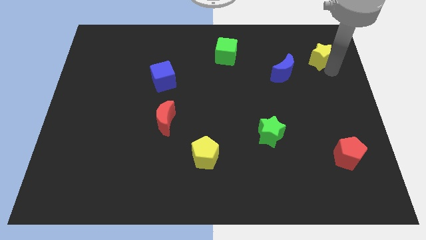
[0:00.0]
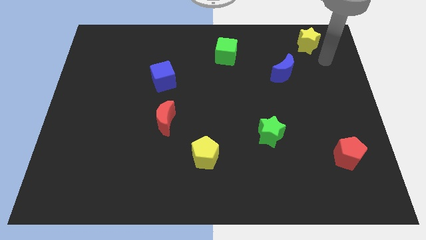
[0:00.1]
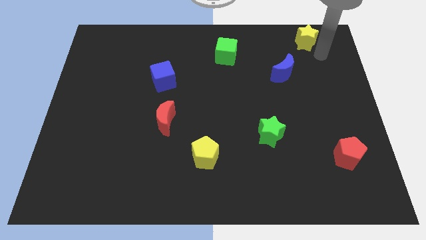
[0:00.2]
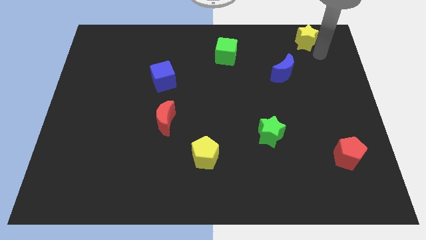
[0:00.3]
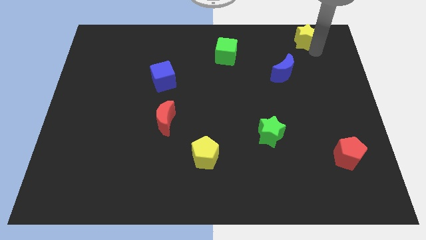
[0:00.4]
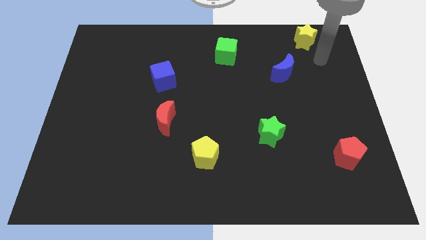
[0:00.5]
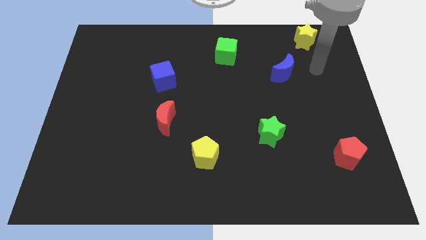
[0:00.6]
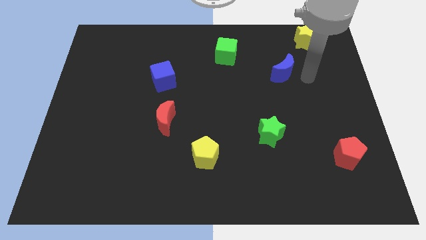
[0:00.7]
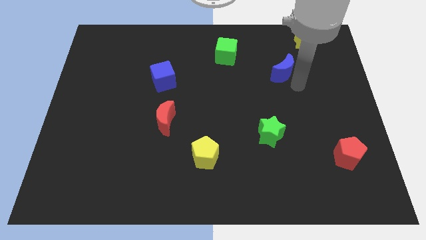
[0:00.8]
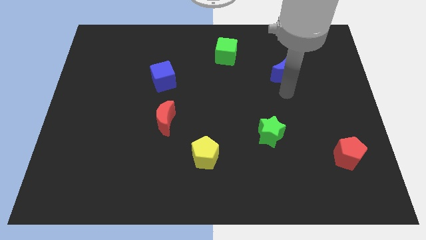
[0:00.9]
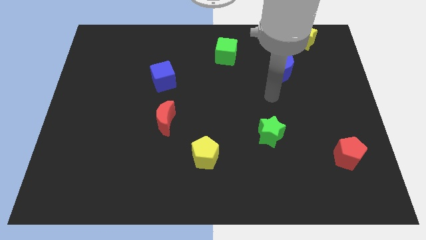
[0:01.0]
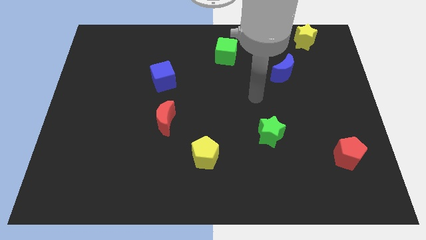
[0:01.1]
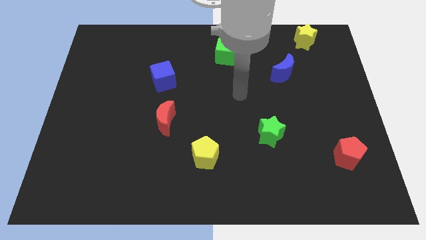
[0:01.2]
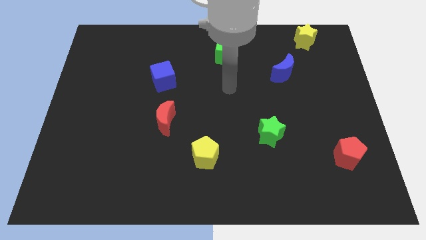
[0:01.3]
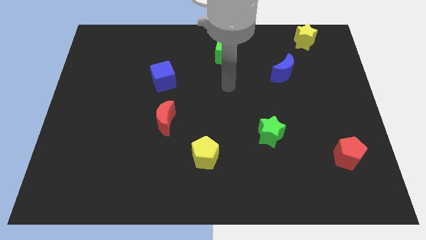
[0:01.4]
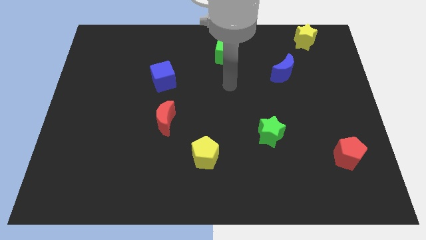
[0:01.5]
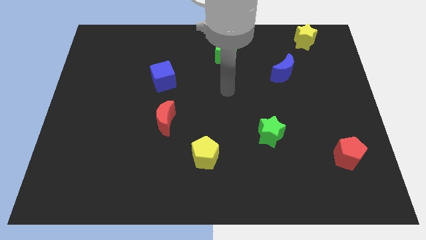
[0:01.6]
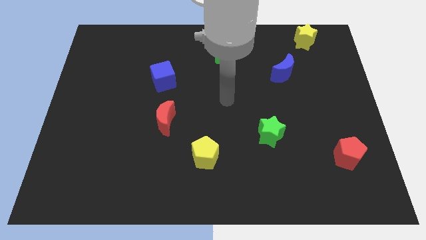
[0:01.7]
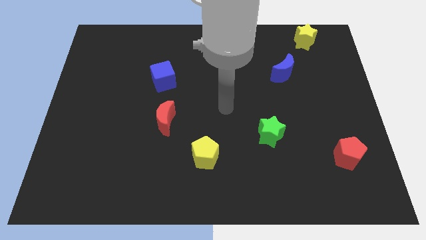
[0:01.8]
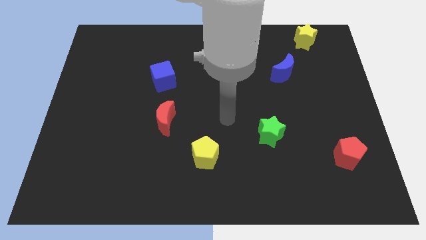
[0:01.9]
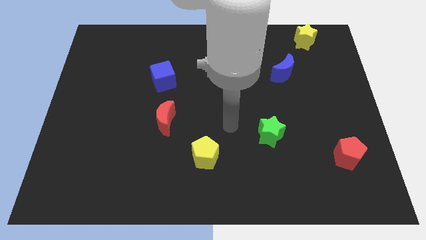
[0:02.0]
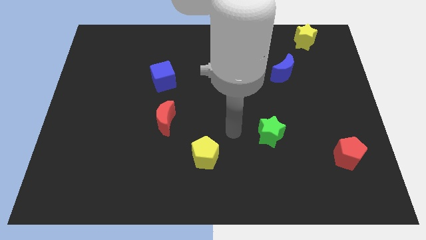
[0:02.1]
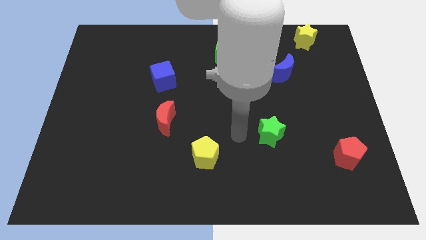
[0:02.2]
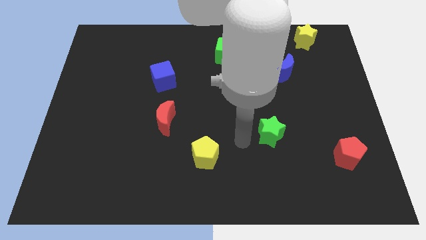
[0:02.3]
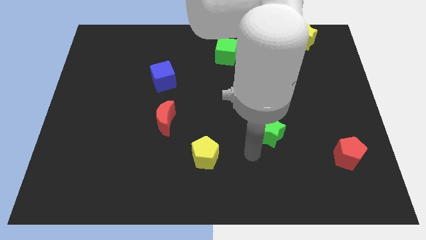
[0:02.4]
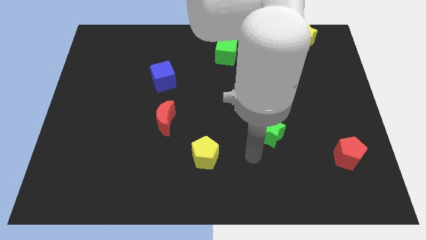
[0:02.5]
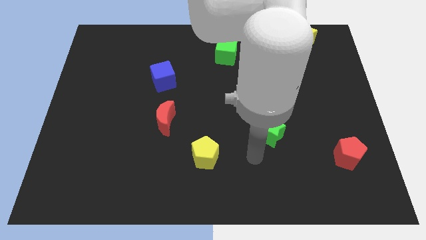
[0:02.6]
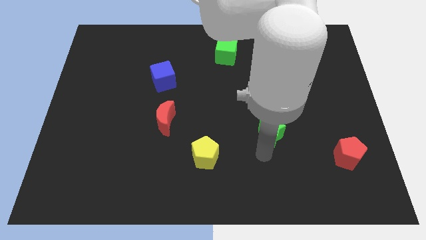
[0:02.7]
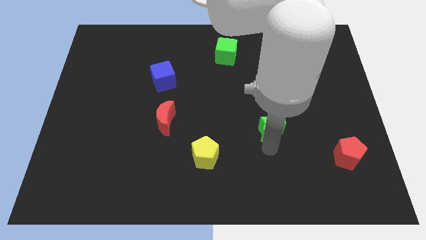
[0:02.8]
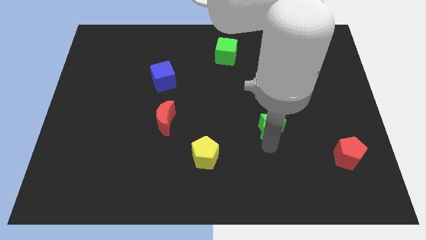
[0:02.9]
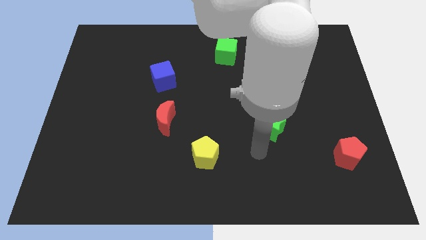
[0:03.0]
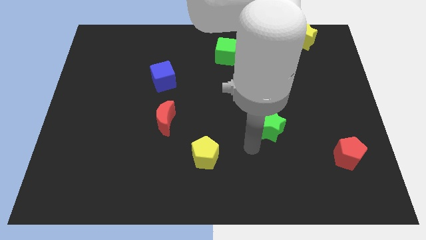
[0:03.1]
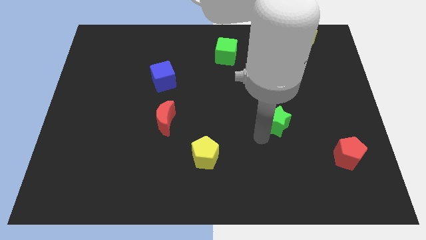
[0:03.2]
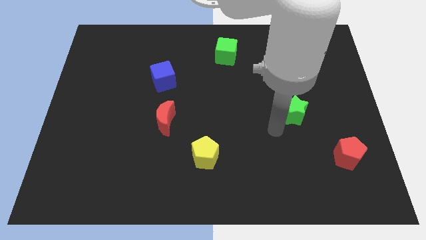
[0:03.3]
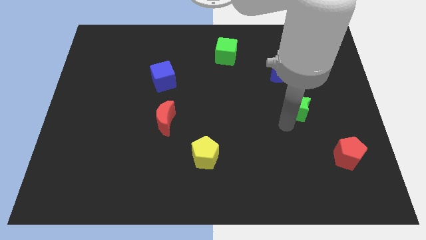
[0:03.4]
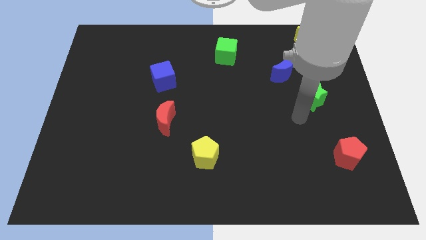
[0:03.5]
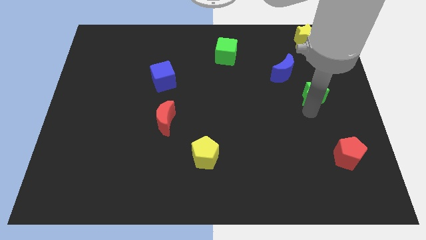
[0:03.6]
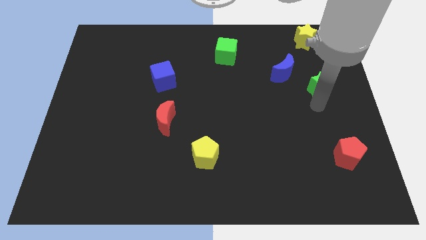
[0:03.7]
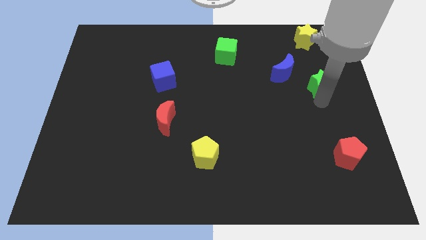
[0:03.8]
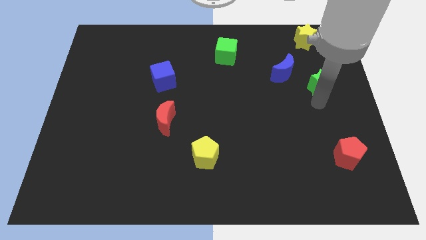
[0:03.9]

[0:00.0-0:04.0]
drag the green star towards the yellow star

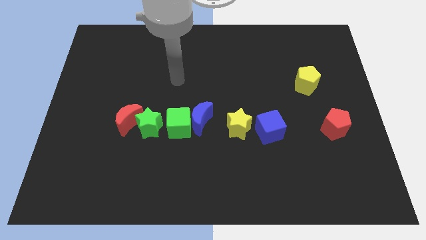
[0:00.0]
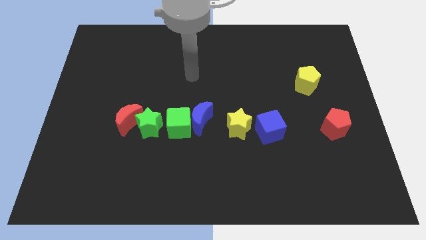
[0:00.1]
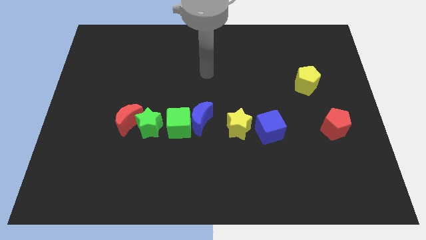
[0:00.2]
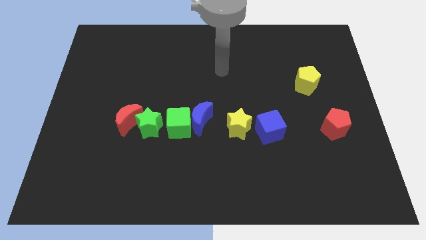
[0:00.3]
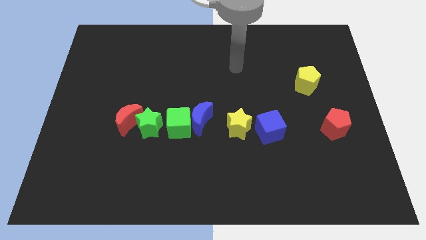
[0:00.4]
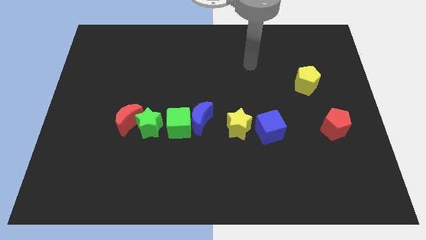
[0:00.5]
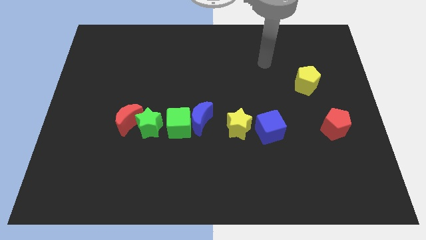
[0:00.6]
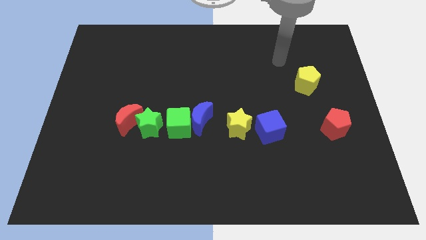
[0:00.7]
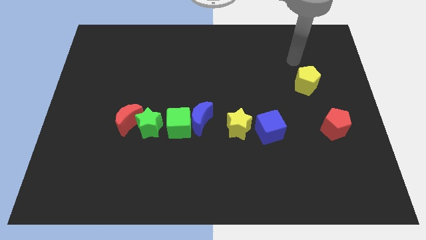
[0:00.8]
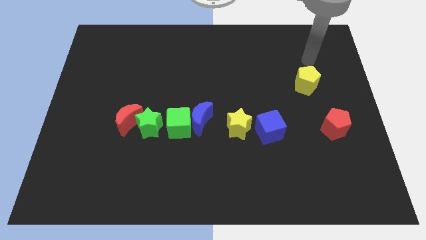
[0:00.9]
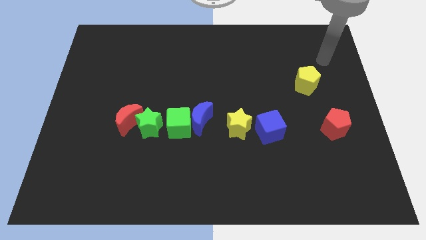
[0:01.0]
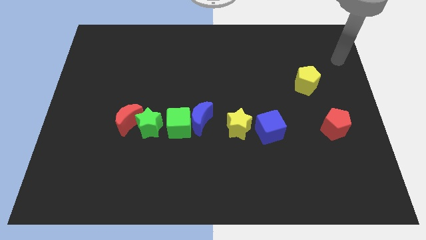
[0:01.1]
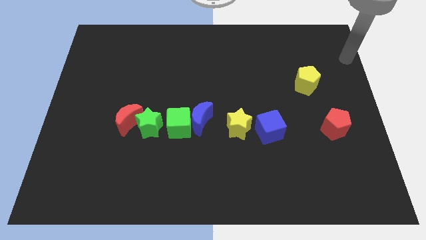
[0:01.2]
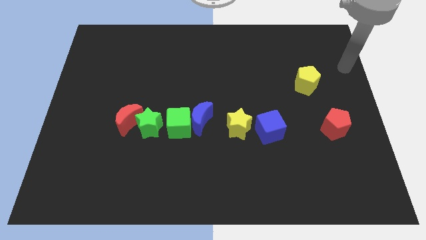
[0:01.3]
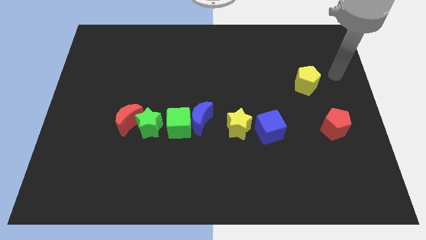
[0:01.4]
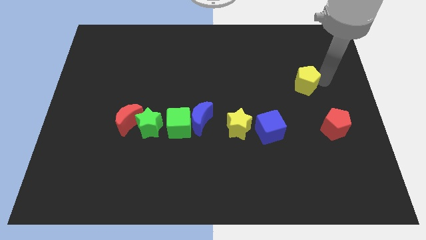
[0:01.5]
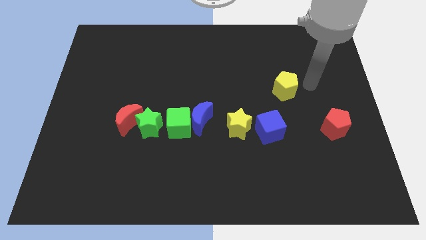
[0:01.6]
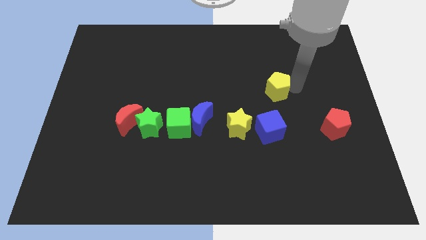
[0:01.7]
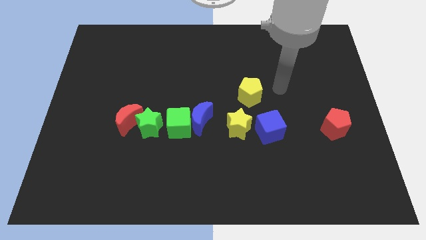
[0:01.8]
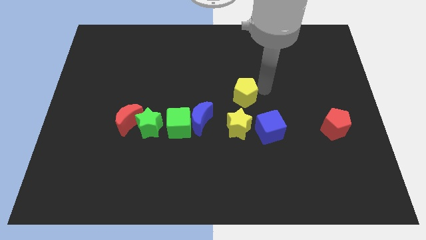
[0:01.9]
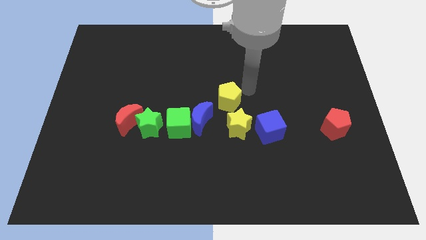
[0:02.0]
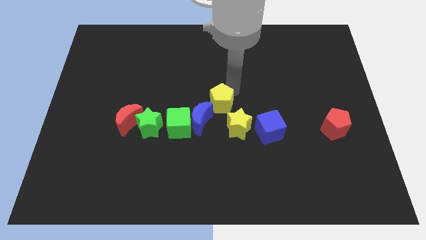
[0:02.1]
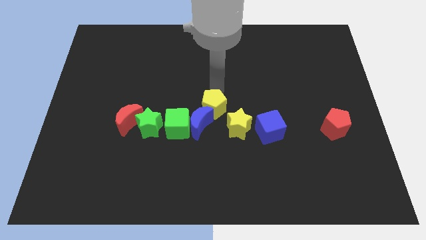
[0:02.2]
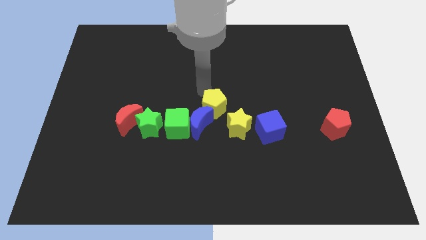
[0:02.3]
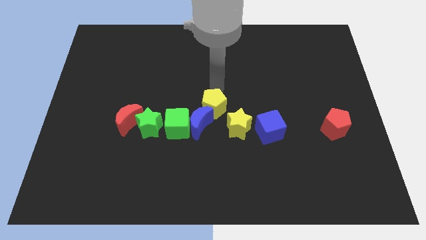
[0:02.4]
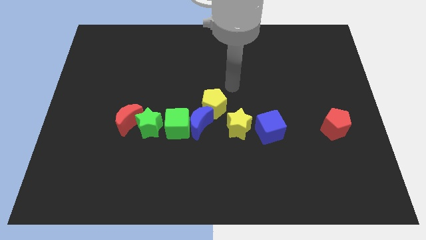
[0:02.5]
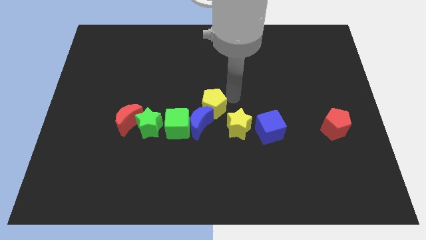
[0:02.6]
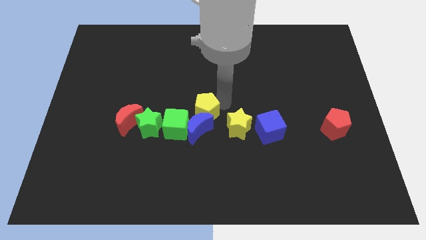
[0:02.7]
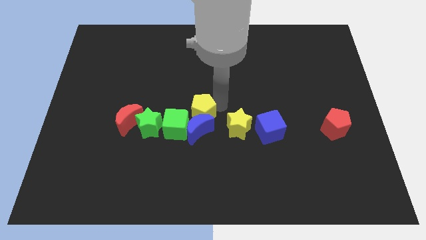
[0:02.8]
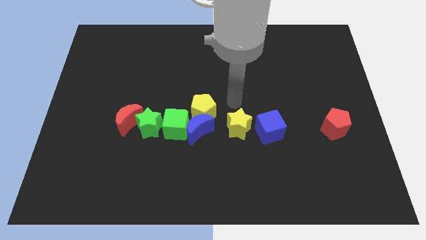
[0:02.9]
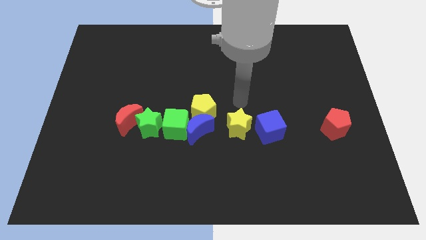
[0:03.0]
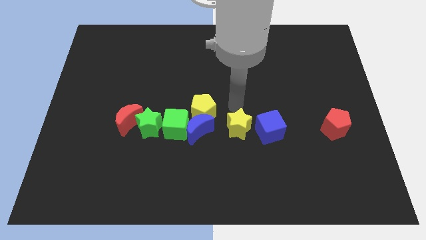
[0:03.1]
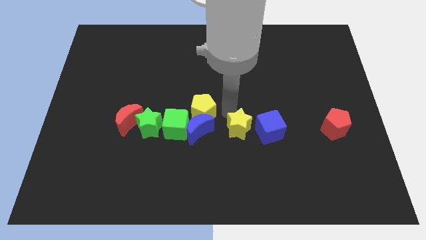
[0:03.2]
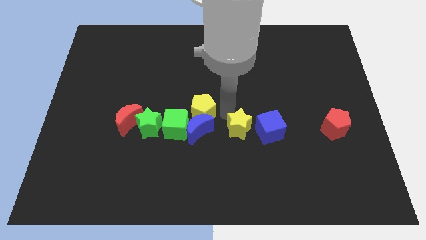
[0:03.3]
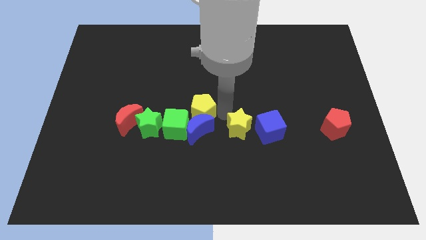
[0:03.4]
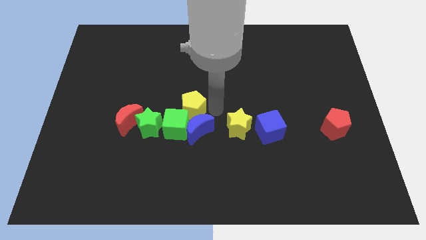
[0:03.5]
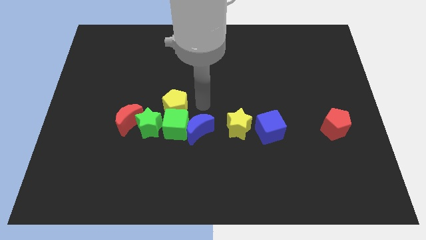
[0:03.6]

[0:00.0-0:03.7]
move yellow pentagon above green cube

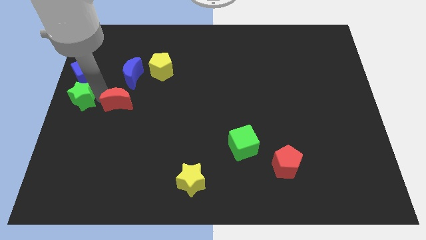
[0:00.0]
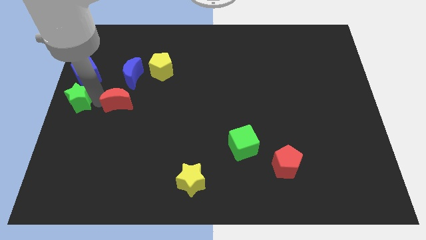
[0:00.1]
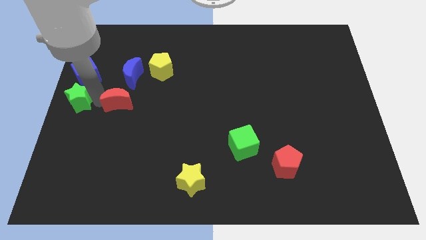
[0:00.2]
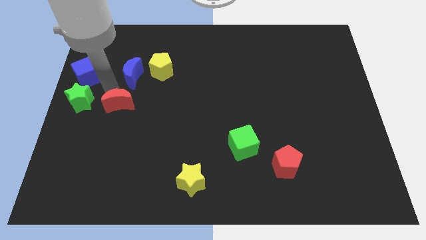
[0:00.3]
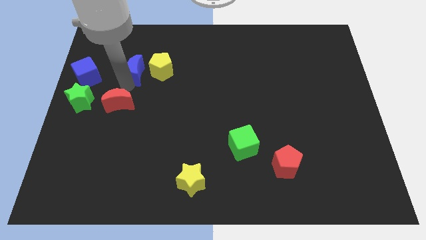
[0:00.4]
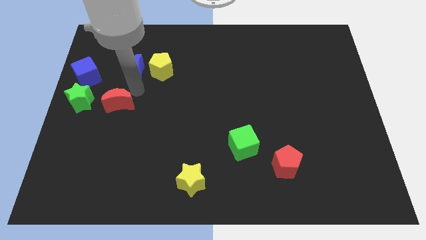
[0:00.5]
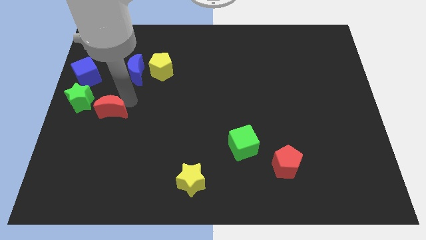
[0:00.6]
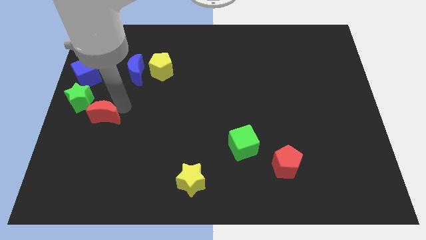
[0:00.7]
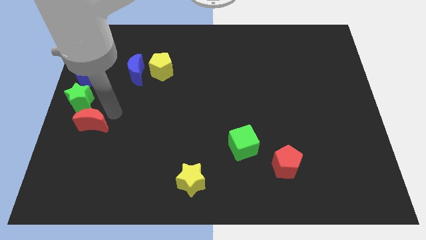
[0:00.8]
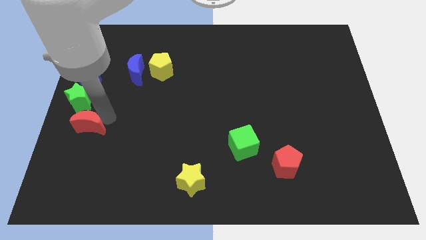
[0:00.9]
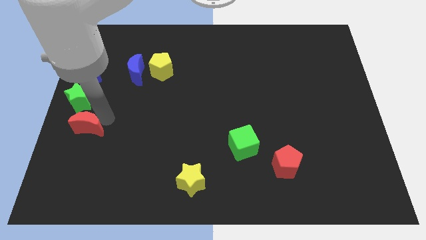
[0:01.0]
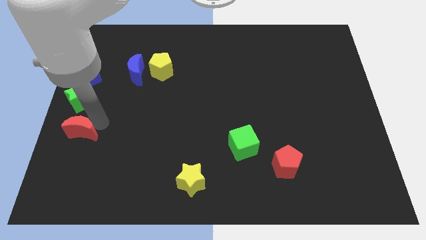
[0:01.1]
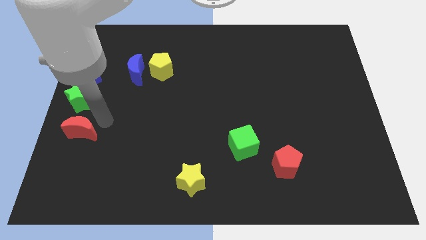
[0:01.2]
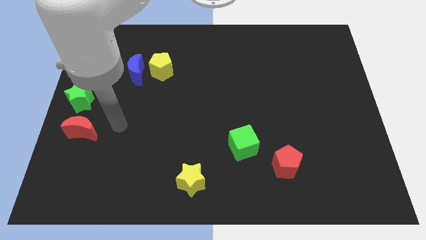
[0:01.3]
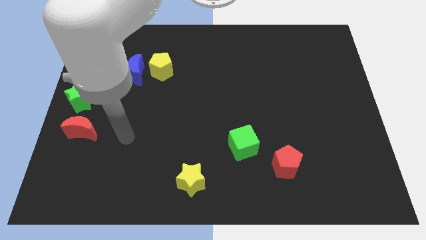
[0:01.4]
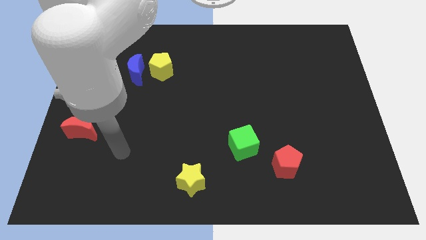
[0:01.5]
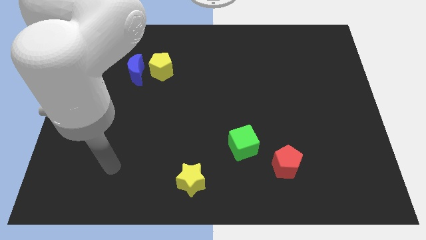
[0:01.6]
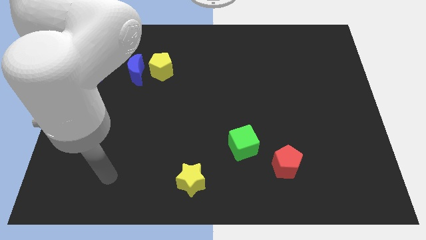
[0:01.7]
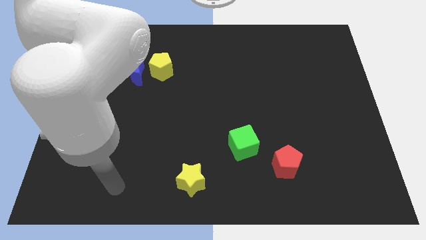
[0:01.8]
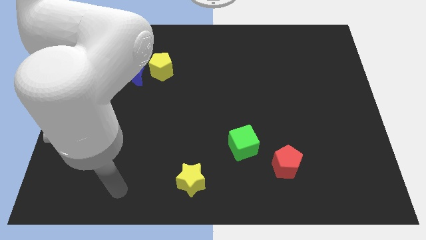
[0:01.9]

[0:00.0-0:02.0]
move the red crescent vertical parallel to the green star
